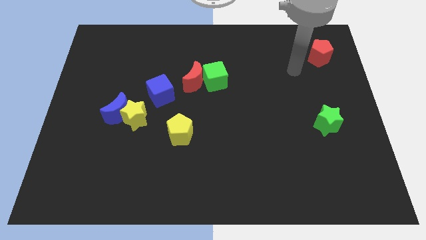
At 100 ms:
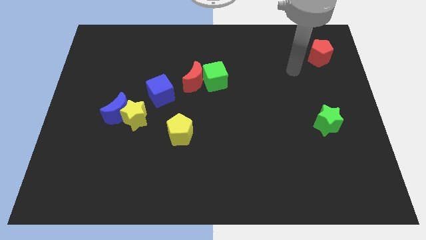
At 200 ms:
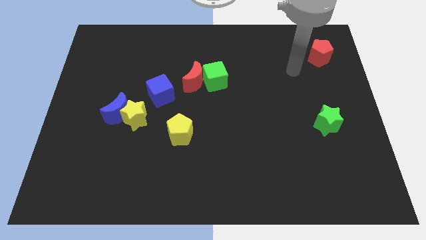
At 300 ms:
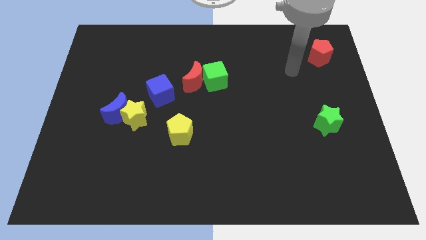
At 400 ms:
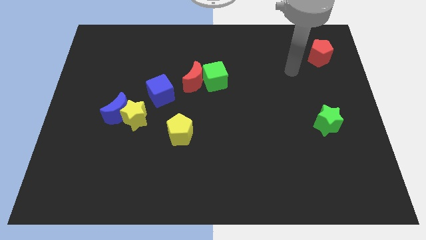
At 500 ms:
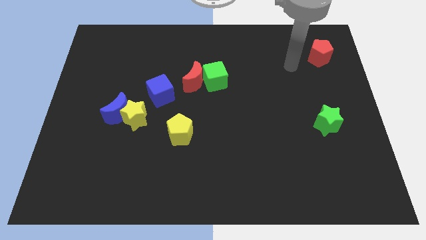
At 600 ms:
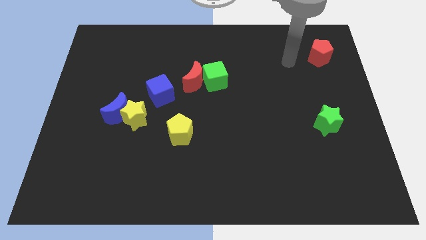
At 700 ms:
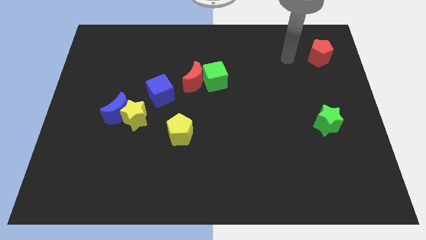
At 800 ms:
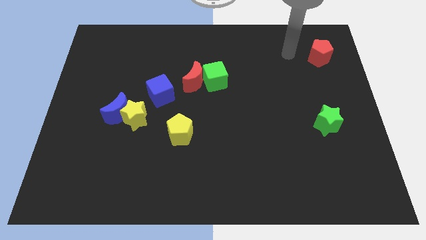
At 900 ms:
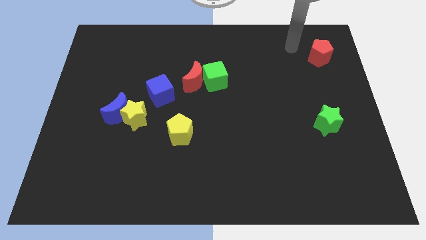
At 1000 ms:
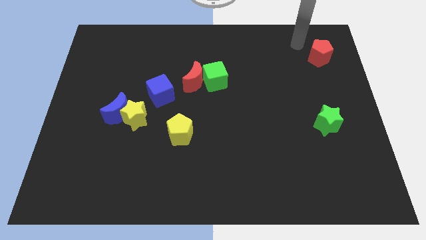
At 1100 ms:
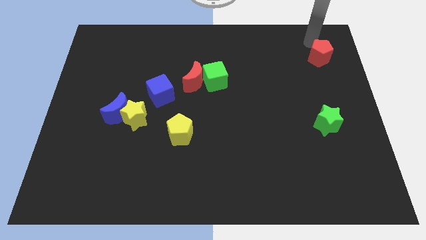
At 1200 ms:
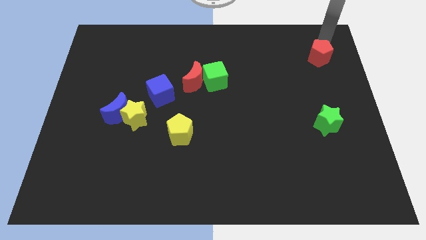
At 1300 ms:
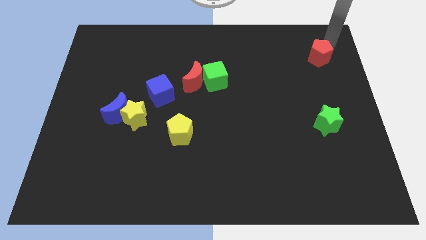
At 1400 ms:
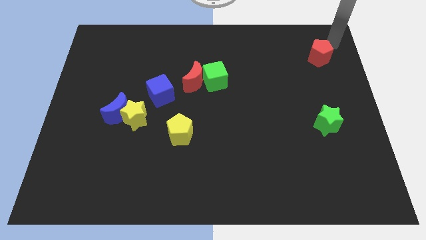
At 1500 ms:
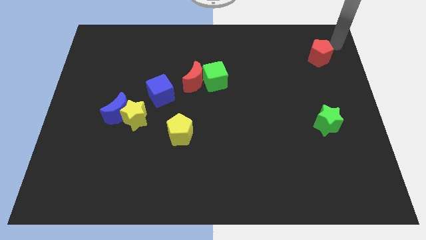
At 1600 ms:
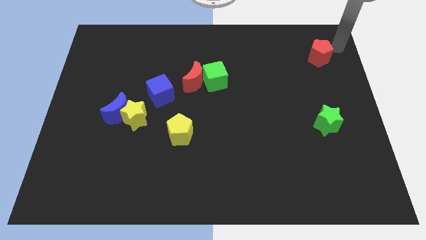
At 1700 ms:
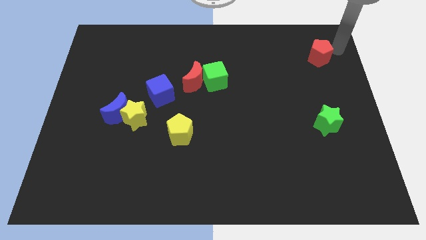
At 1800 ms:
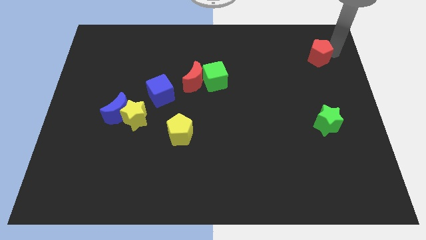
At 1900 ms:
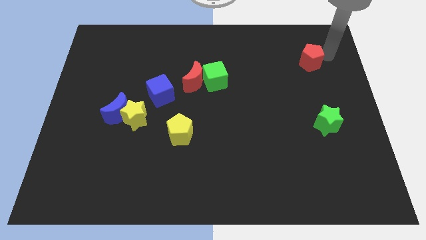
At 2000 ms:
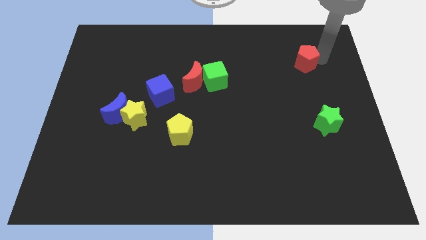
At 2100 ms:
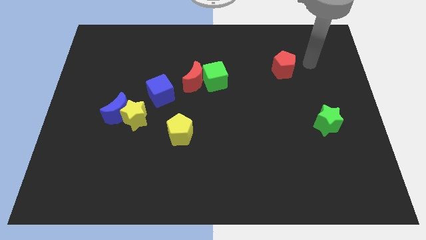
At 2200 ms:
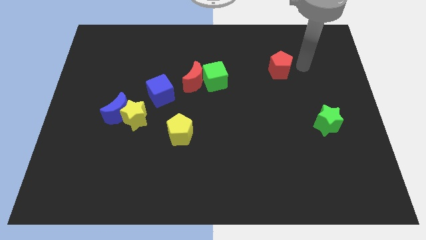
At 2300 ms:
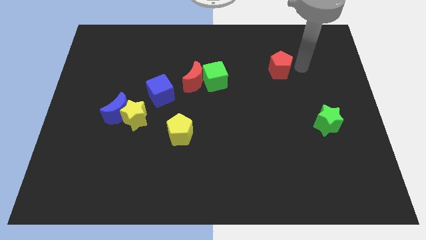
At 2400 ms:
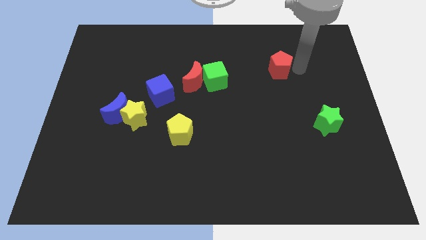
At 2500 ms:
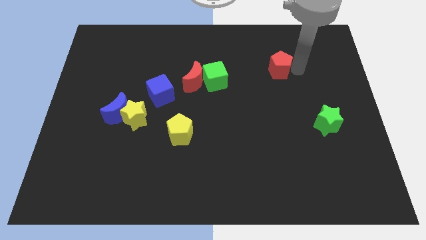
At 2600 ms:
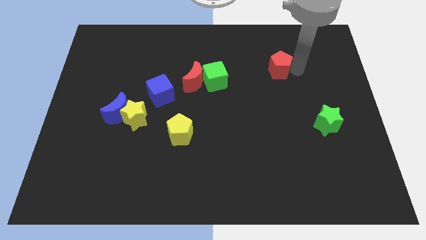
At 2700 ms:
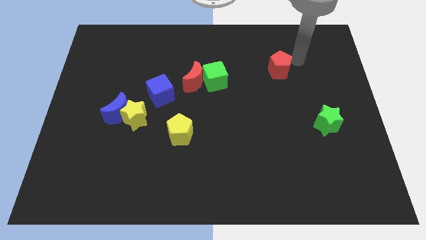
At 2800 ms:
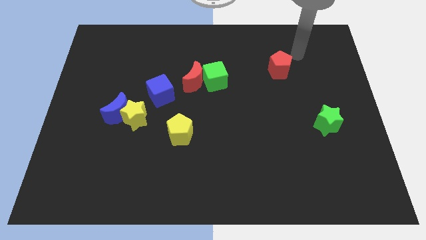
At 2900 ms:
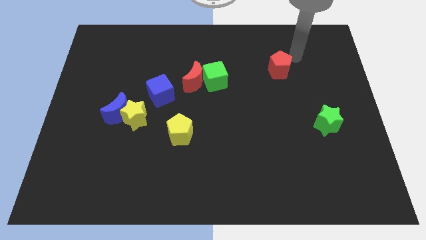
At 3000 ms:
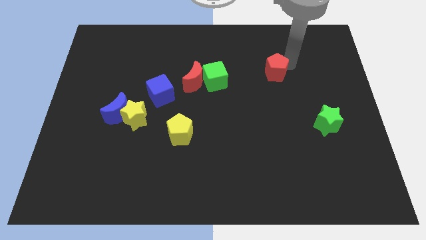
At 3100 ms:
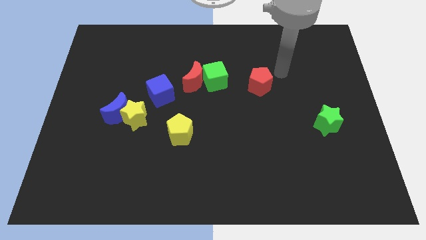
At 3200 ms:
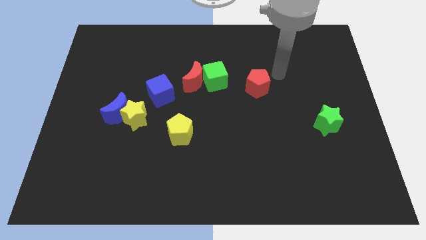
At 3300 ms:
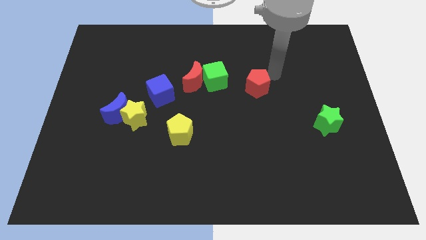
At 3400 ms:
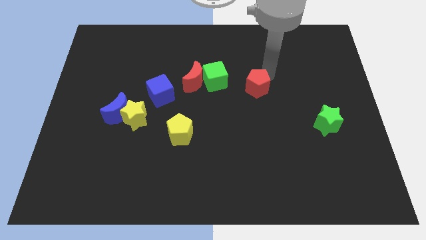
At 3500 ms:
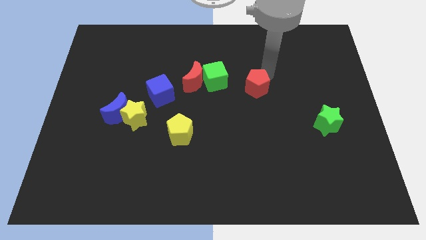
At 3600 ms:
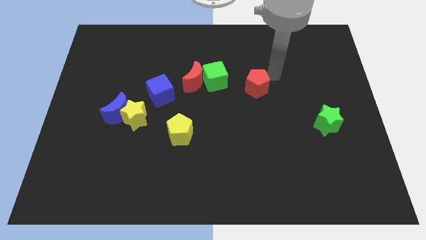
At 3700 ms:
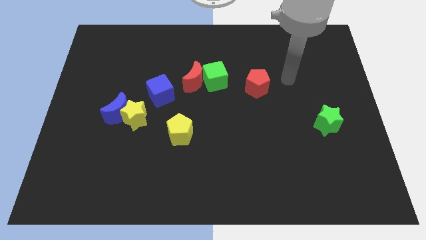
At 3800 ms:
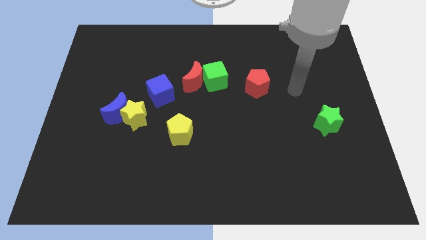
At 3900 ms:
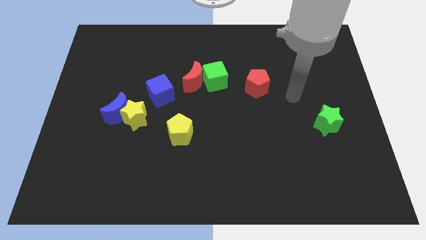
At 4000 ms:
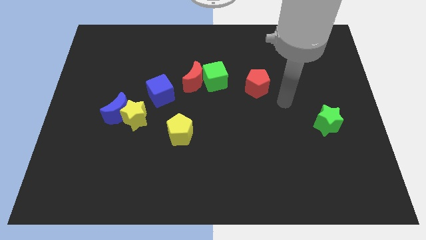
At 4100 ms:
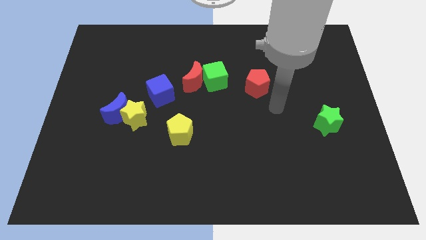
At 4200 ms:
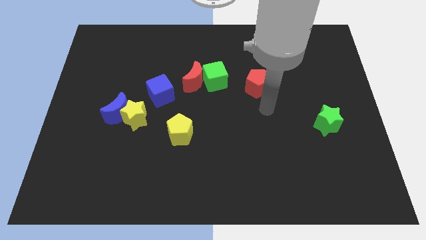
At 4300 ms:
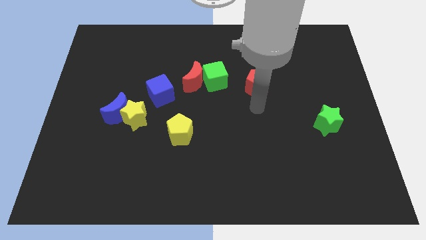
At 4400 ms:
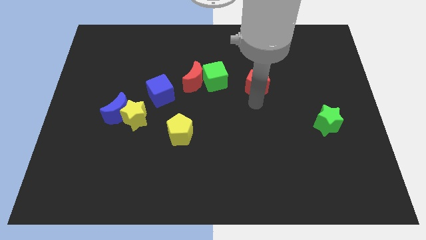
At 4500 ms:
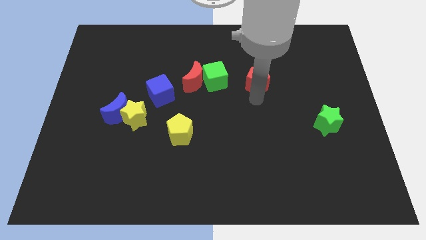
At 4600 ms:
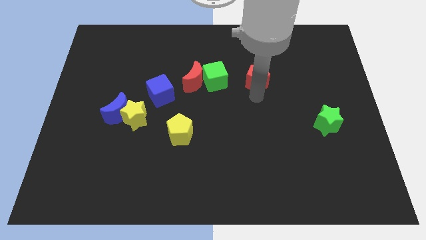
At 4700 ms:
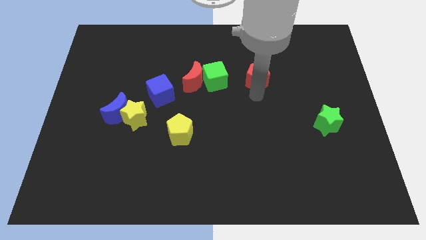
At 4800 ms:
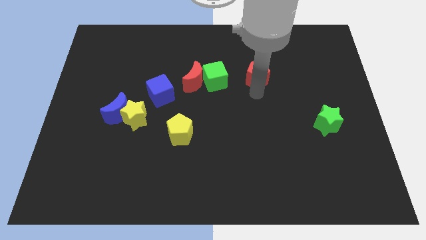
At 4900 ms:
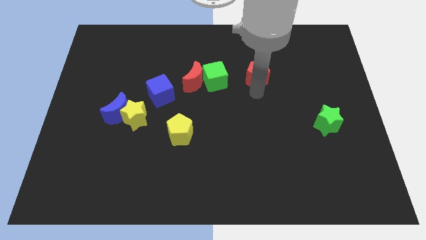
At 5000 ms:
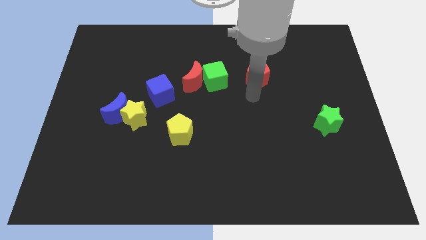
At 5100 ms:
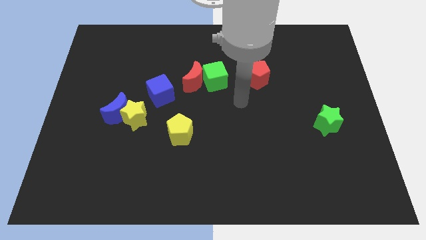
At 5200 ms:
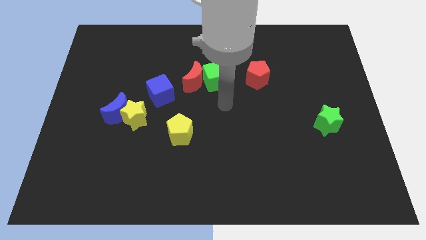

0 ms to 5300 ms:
place the red pentagon to the right of the green cube

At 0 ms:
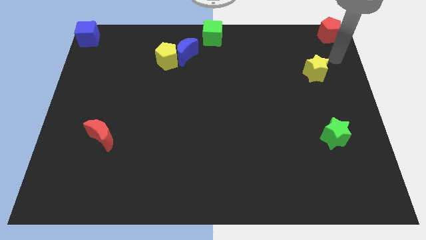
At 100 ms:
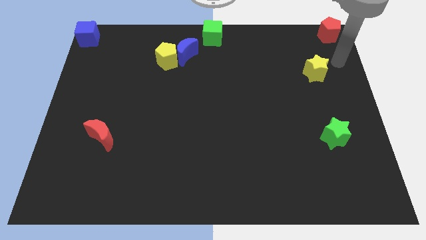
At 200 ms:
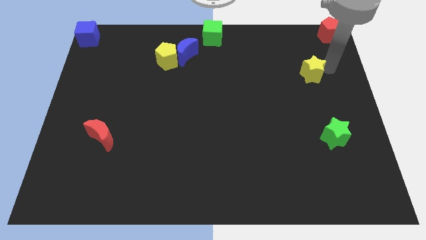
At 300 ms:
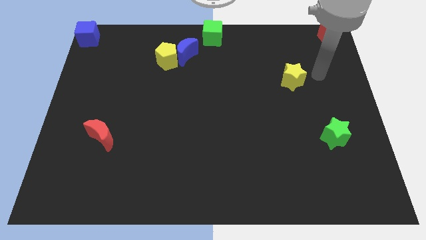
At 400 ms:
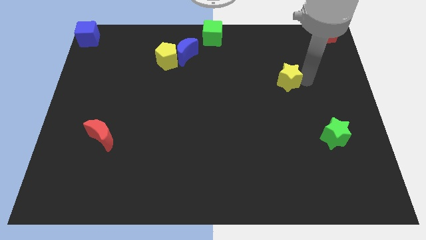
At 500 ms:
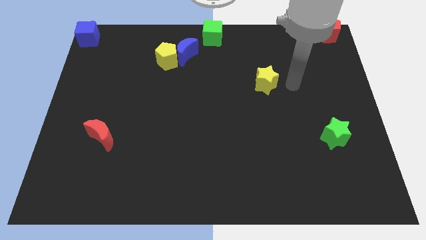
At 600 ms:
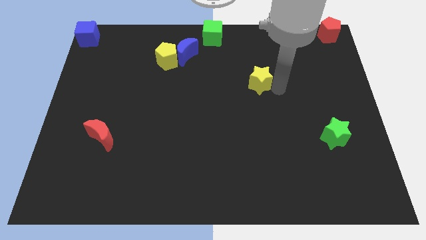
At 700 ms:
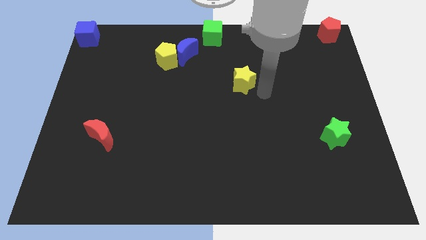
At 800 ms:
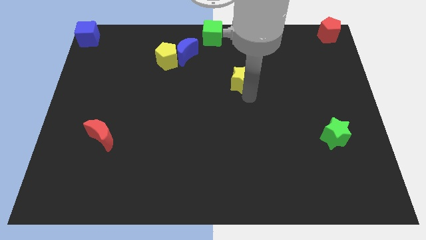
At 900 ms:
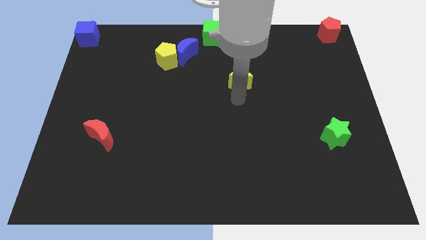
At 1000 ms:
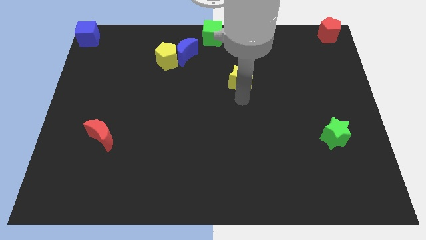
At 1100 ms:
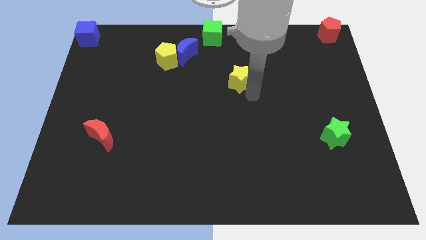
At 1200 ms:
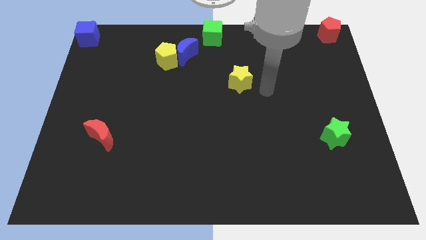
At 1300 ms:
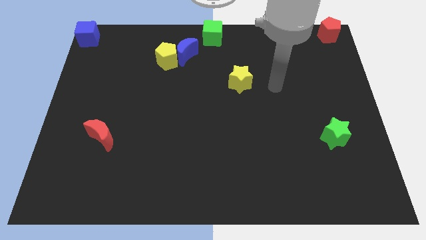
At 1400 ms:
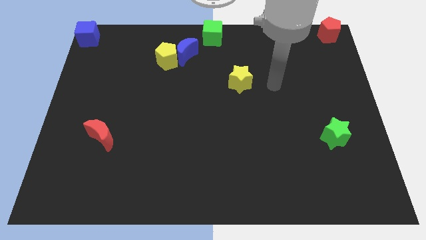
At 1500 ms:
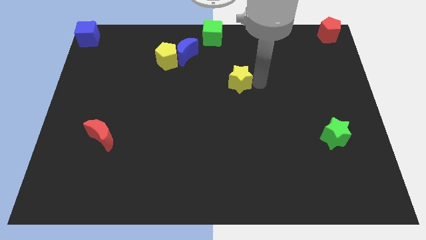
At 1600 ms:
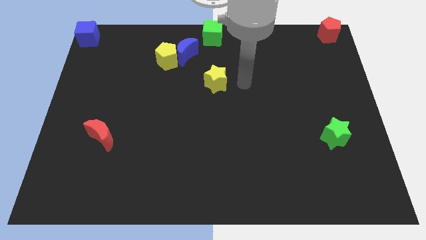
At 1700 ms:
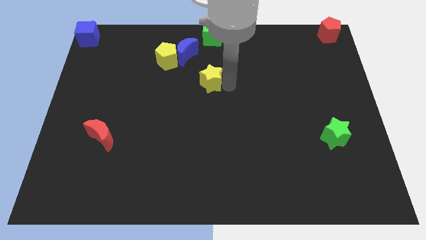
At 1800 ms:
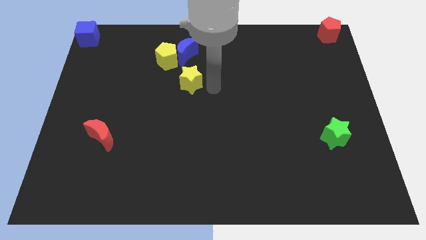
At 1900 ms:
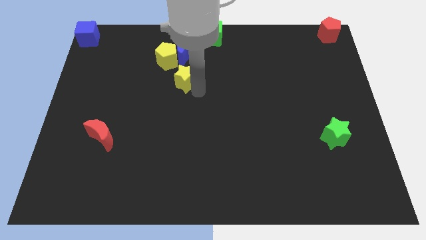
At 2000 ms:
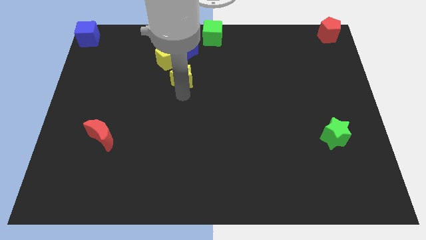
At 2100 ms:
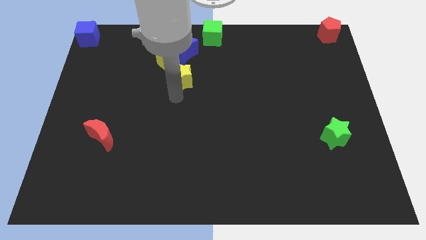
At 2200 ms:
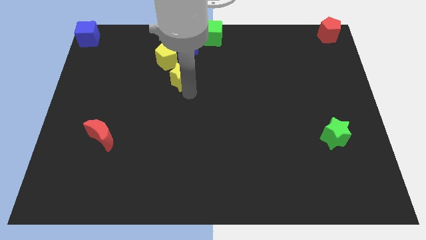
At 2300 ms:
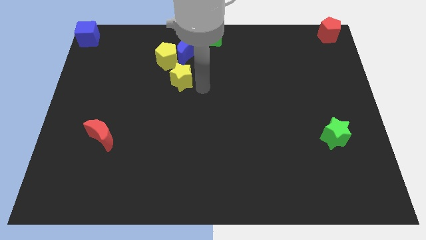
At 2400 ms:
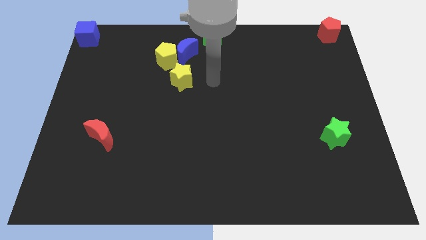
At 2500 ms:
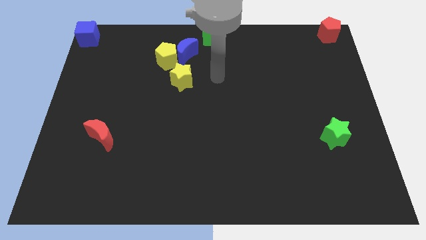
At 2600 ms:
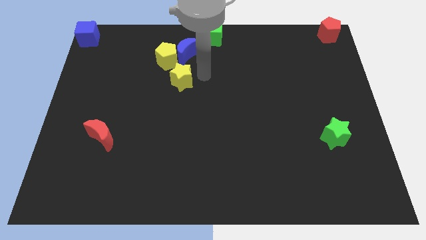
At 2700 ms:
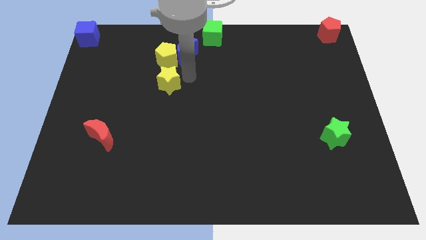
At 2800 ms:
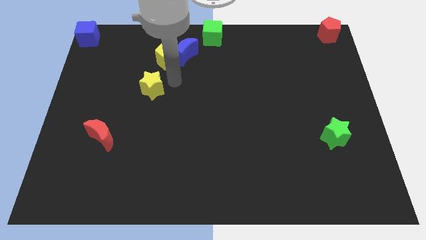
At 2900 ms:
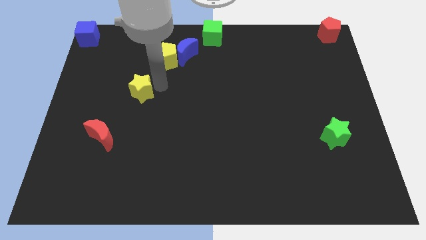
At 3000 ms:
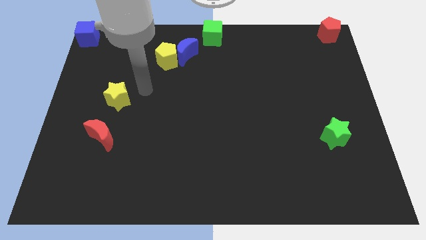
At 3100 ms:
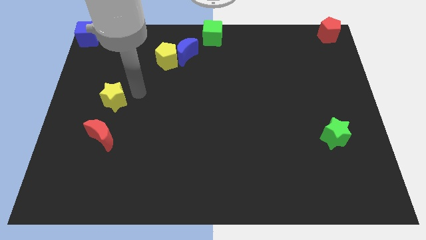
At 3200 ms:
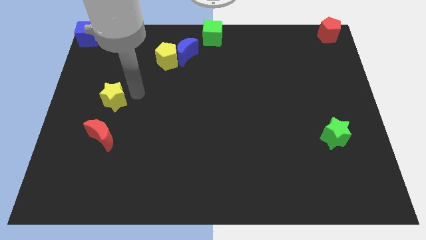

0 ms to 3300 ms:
move the yellow star to the center left

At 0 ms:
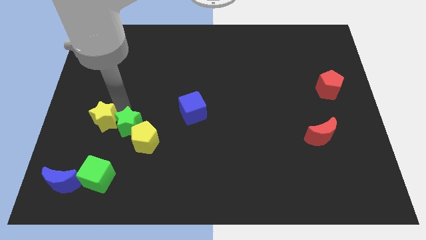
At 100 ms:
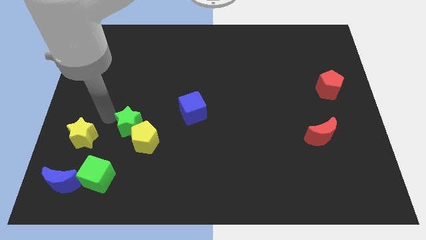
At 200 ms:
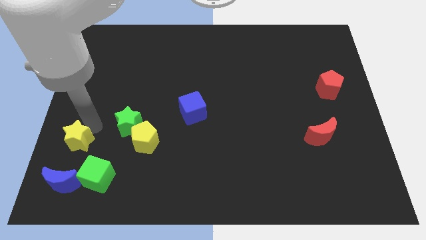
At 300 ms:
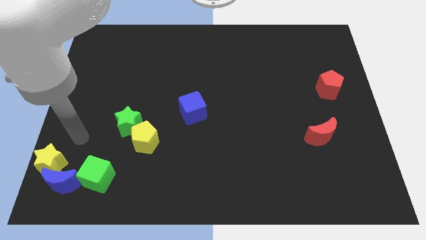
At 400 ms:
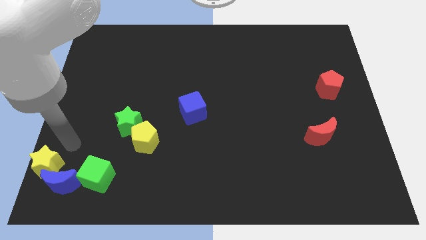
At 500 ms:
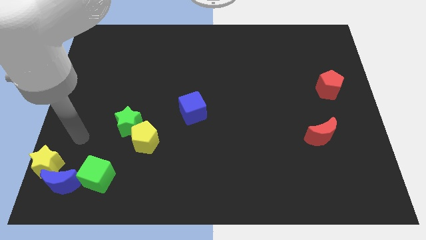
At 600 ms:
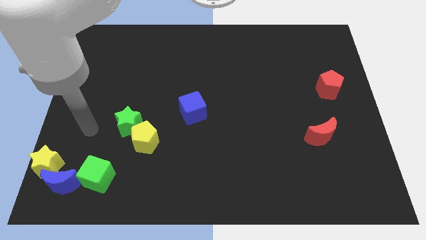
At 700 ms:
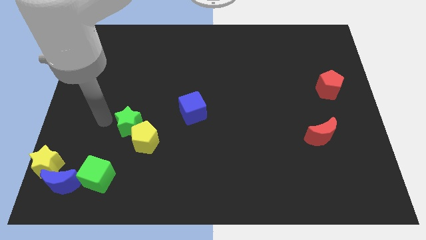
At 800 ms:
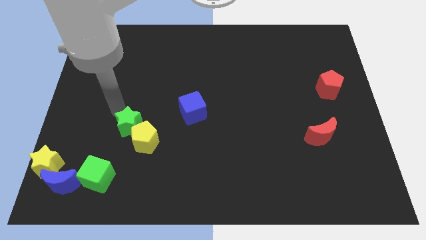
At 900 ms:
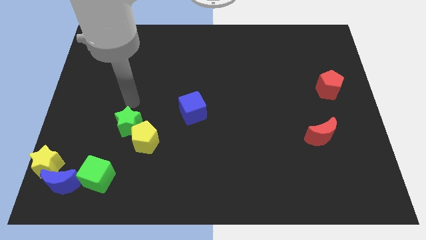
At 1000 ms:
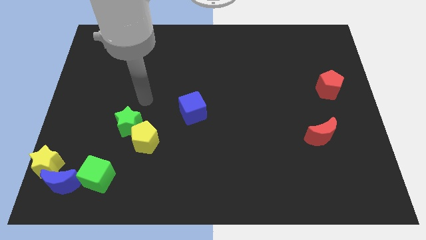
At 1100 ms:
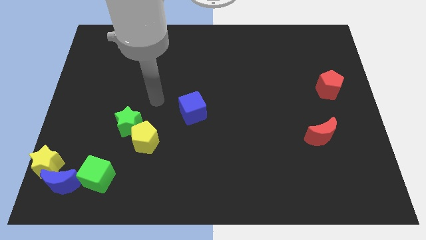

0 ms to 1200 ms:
separate yellow star from the green star
